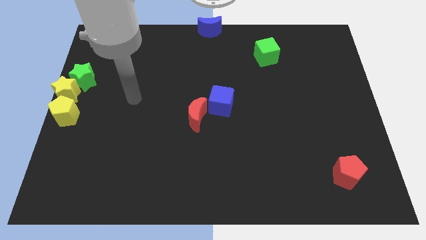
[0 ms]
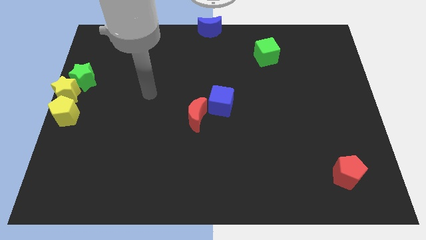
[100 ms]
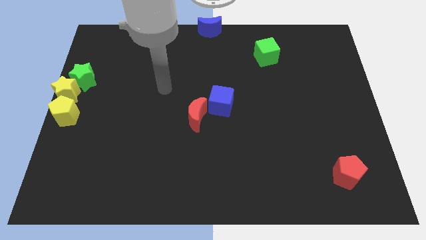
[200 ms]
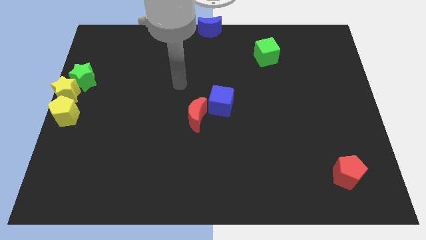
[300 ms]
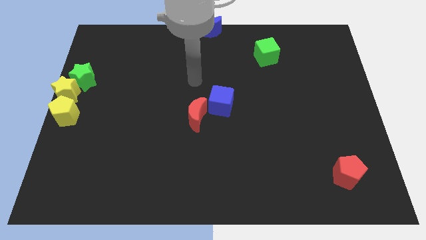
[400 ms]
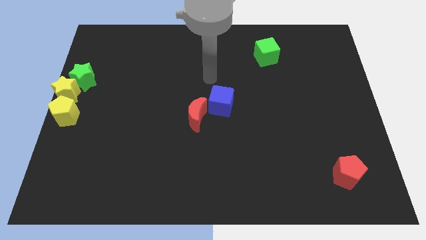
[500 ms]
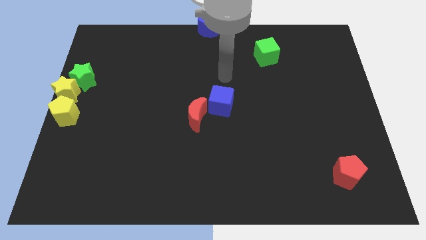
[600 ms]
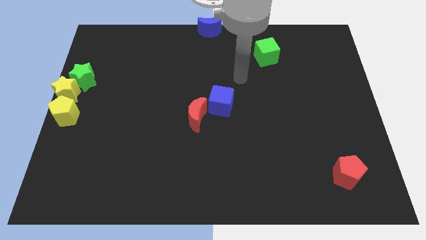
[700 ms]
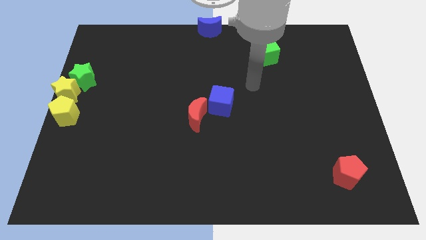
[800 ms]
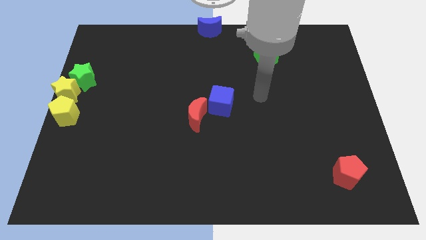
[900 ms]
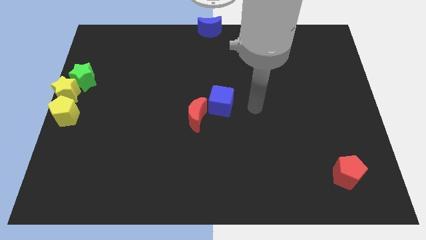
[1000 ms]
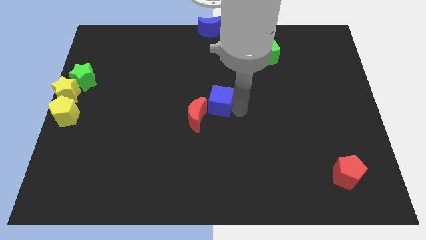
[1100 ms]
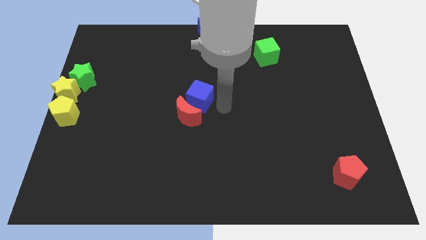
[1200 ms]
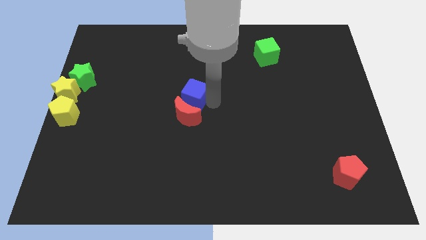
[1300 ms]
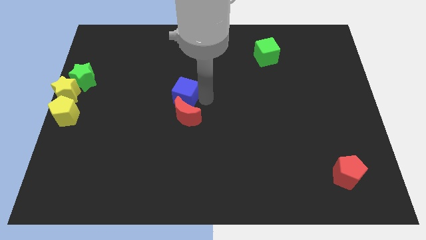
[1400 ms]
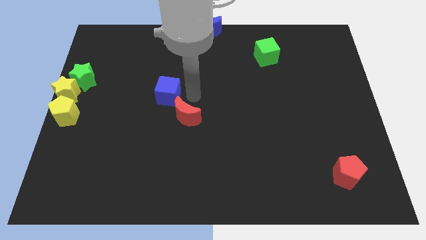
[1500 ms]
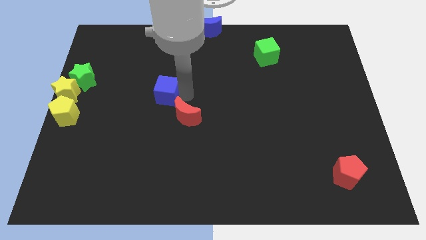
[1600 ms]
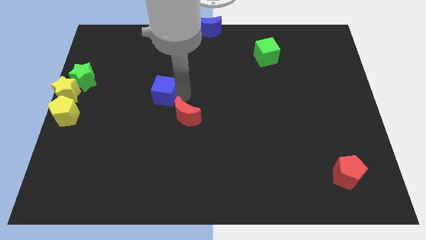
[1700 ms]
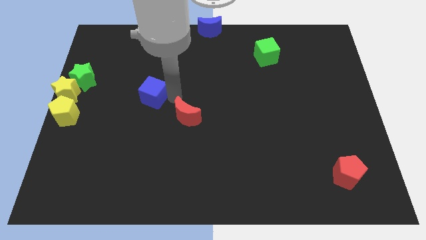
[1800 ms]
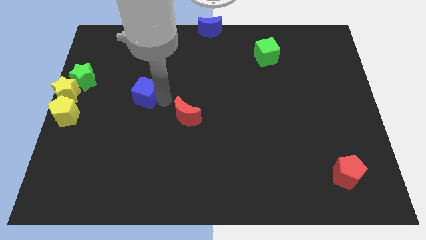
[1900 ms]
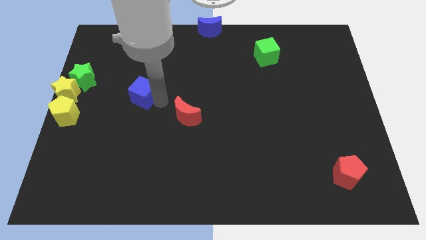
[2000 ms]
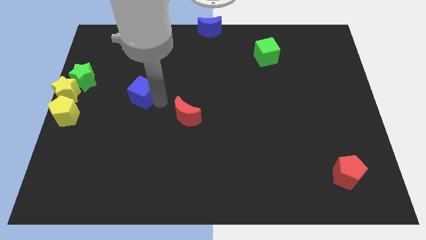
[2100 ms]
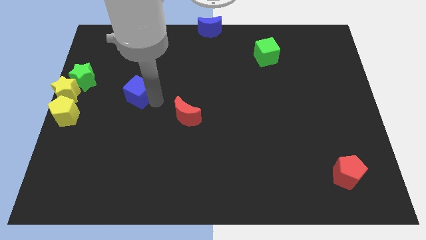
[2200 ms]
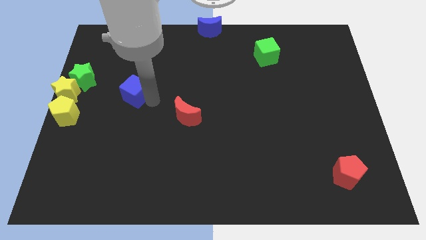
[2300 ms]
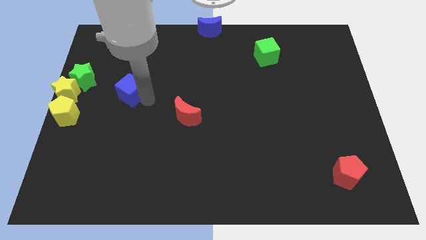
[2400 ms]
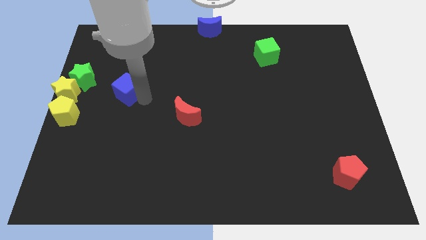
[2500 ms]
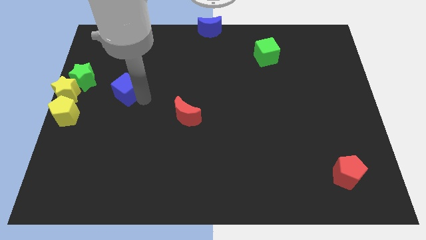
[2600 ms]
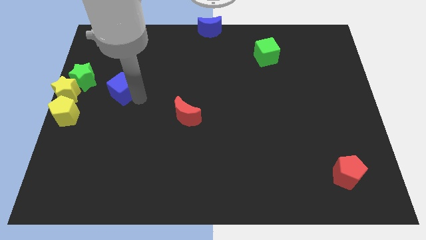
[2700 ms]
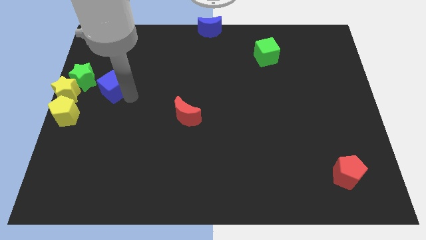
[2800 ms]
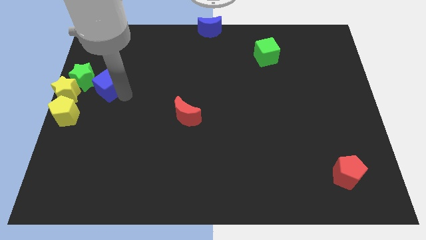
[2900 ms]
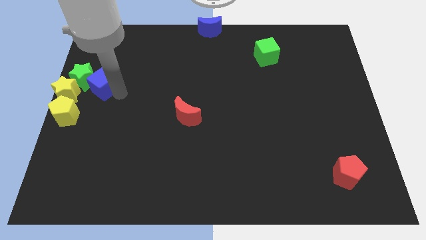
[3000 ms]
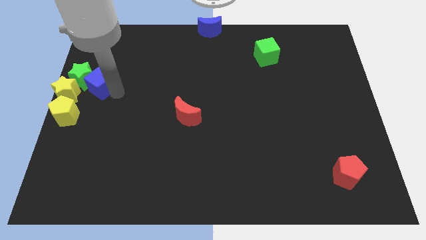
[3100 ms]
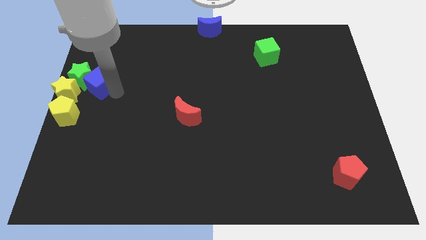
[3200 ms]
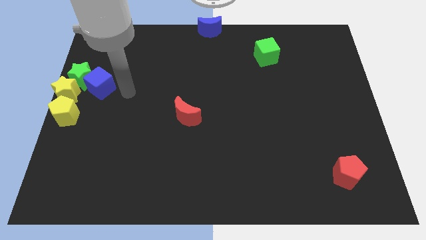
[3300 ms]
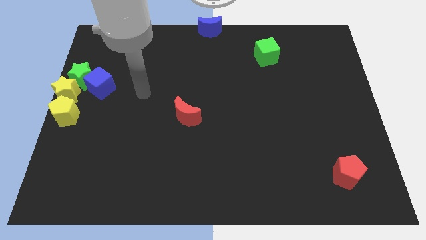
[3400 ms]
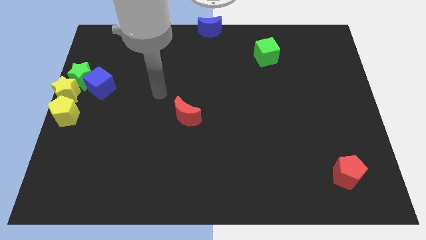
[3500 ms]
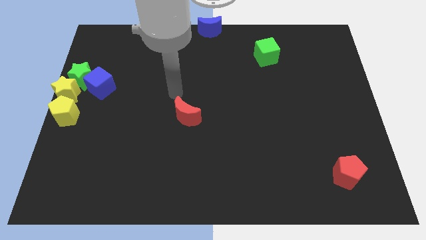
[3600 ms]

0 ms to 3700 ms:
push the blue cube close to the green star

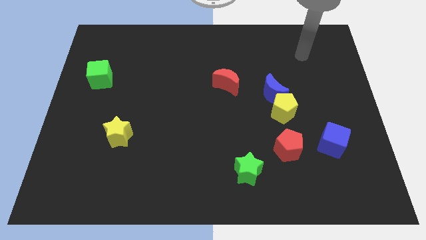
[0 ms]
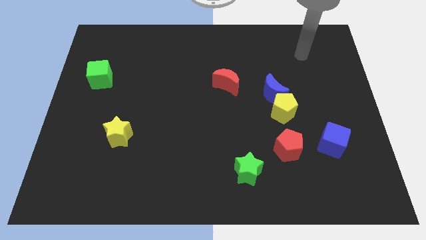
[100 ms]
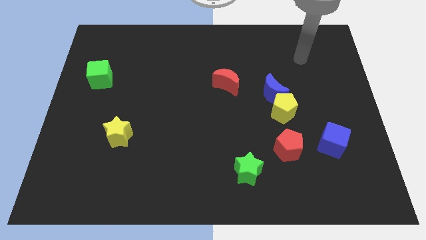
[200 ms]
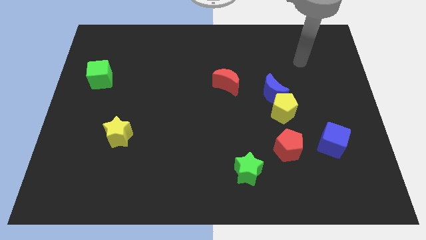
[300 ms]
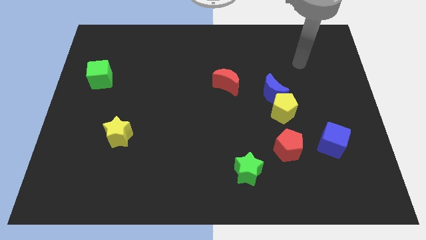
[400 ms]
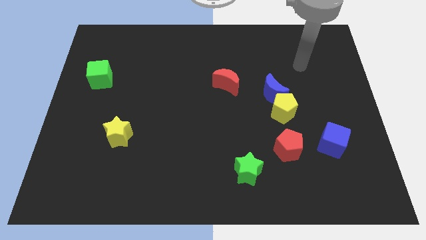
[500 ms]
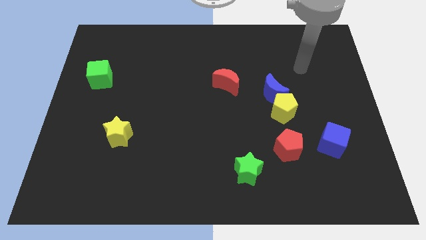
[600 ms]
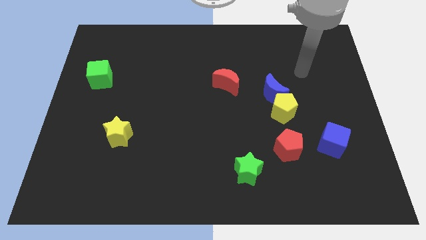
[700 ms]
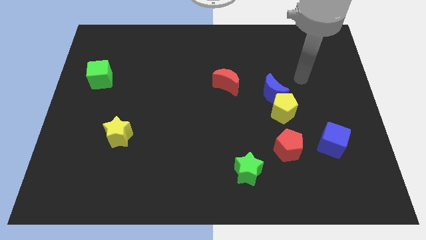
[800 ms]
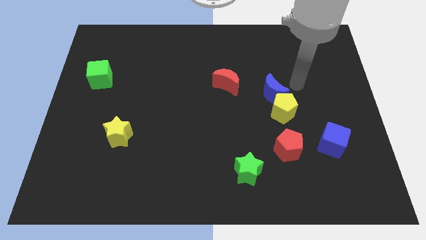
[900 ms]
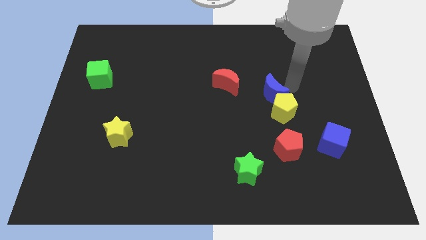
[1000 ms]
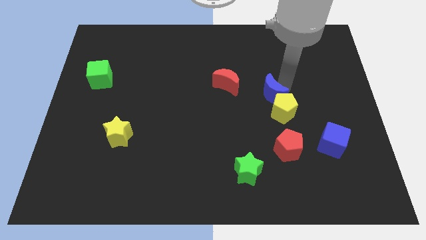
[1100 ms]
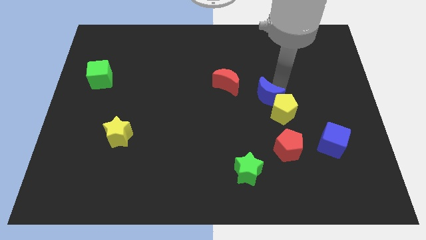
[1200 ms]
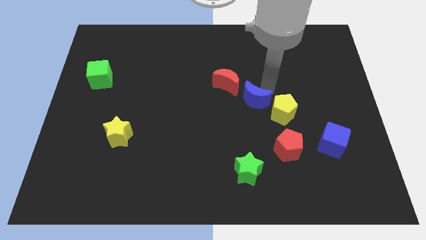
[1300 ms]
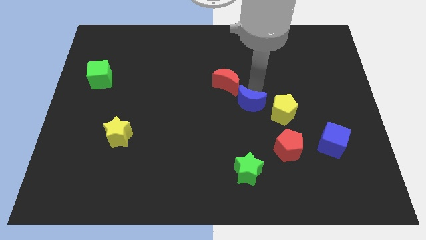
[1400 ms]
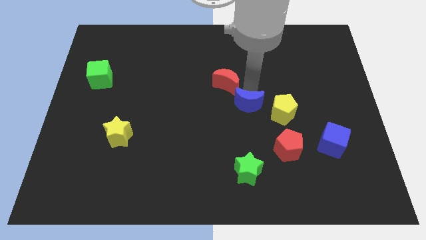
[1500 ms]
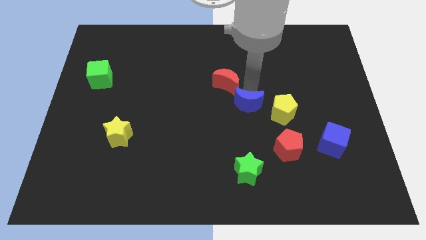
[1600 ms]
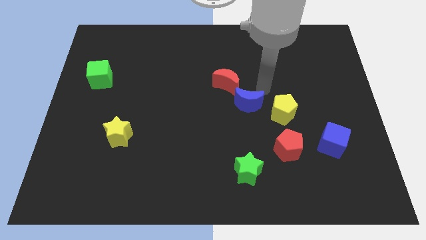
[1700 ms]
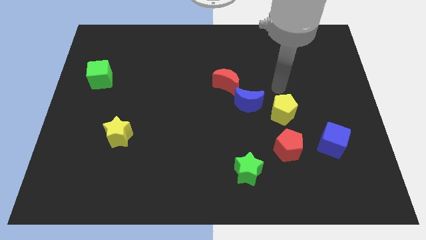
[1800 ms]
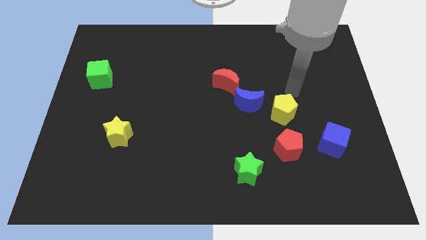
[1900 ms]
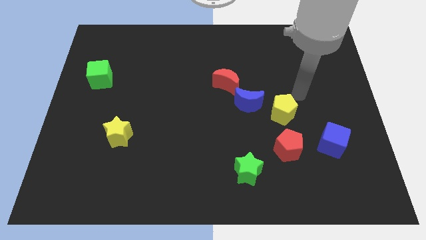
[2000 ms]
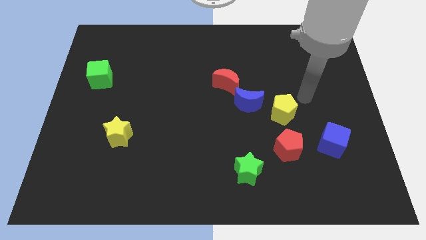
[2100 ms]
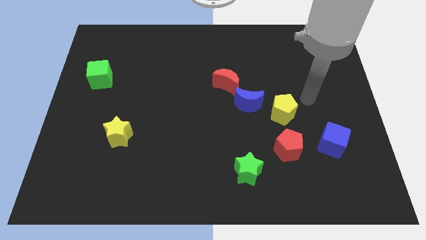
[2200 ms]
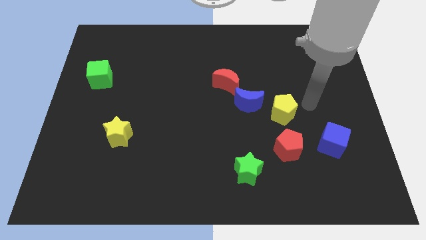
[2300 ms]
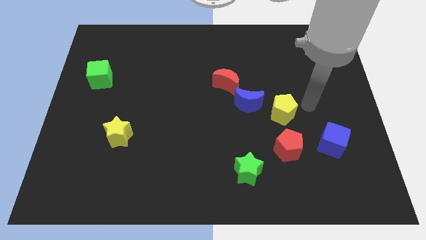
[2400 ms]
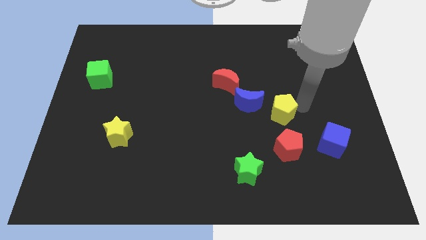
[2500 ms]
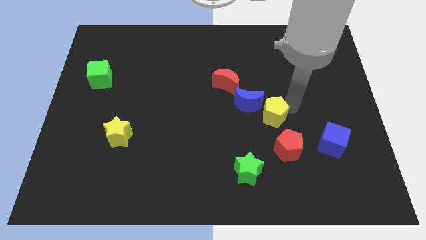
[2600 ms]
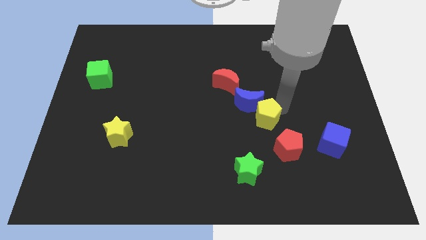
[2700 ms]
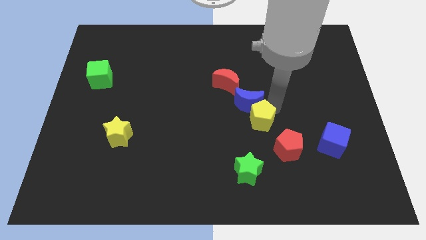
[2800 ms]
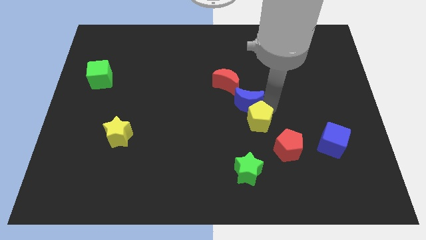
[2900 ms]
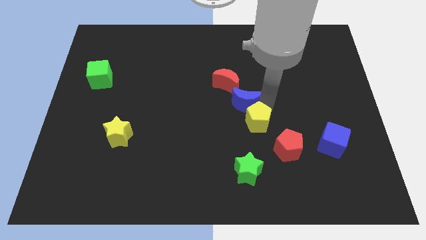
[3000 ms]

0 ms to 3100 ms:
place the yellow pentagon down to the blue moon

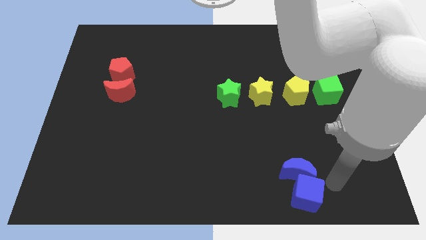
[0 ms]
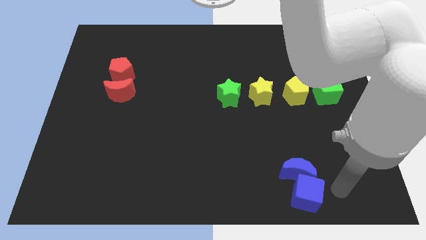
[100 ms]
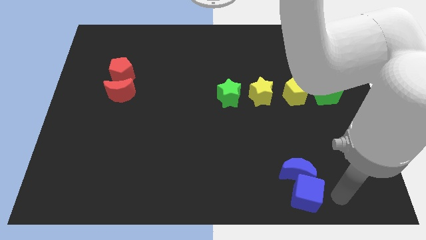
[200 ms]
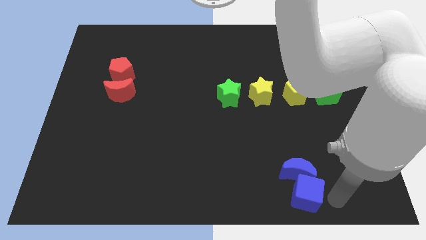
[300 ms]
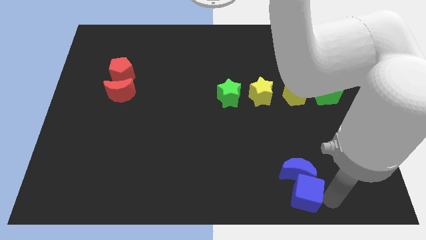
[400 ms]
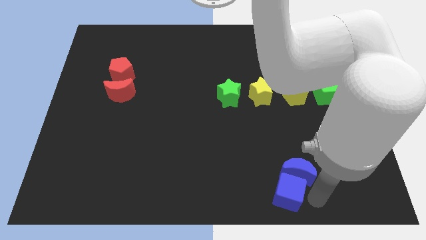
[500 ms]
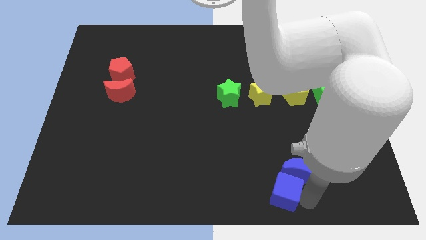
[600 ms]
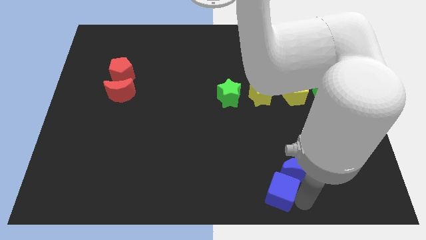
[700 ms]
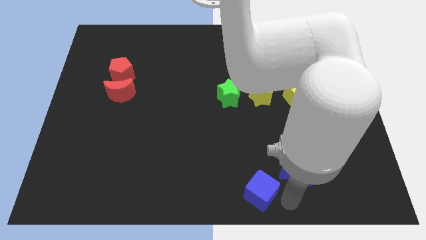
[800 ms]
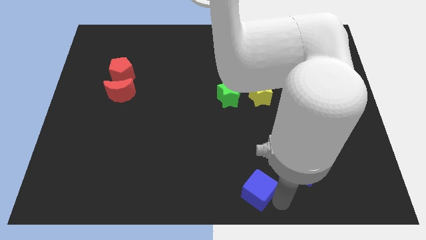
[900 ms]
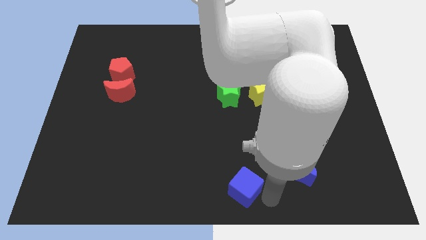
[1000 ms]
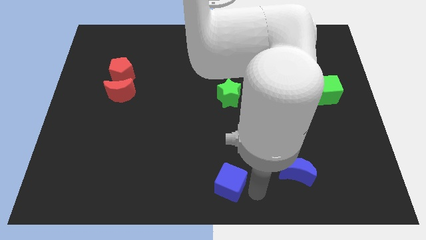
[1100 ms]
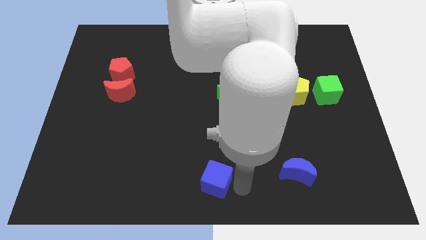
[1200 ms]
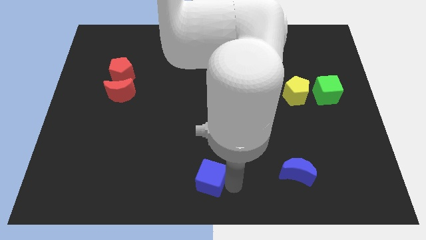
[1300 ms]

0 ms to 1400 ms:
separate the blue cube and blue crescent from each other

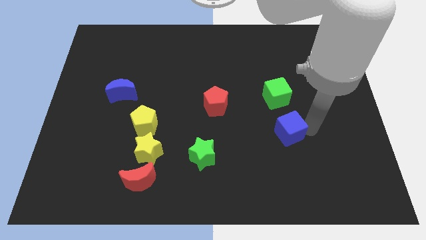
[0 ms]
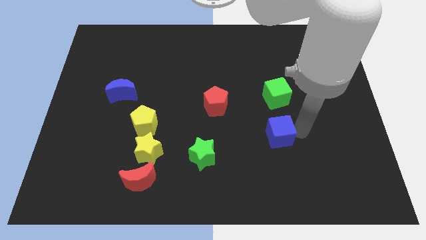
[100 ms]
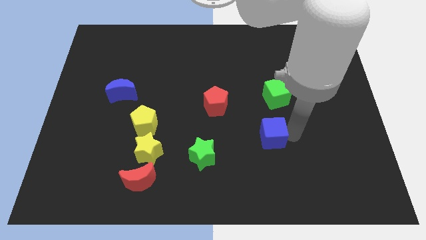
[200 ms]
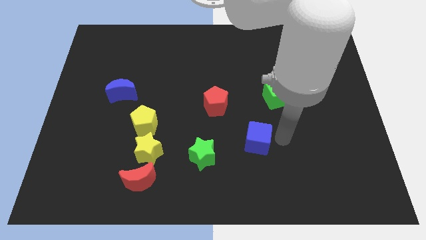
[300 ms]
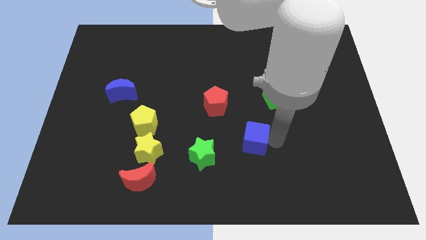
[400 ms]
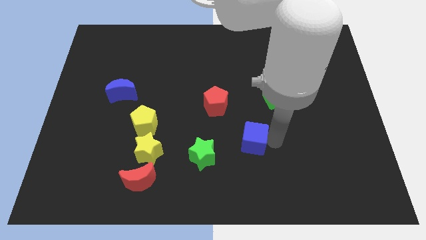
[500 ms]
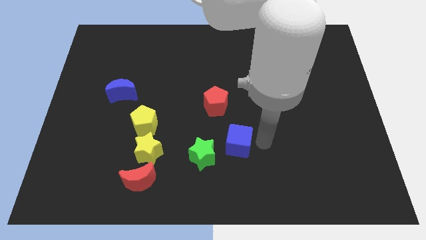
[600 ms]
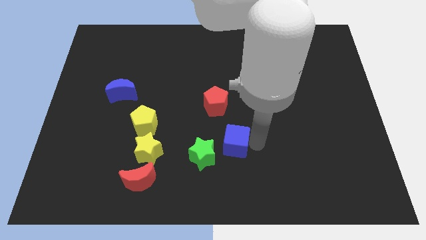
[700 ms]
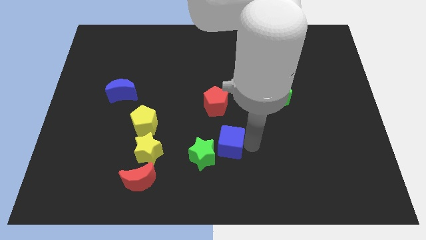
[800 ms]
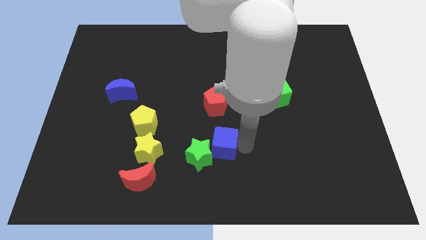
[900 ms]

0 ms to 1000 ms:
move the blue cube towards the left near to green star
